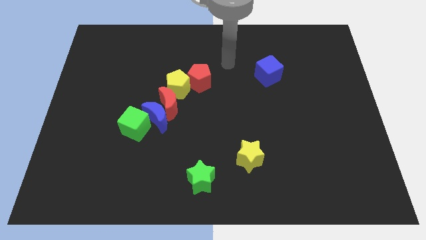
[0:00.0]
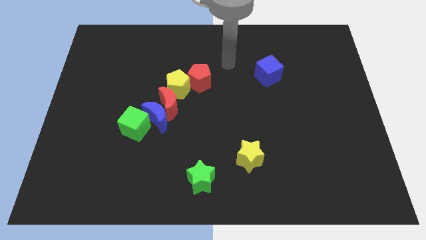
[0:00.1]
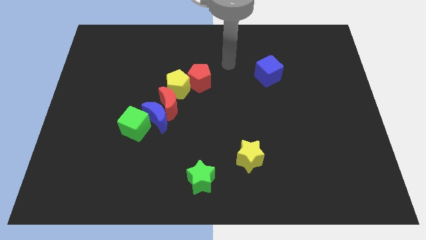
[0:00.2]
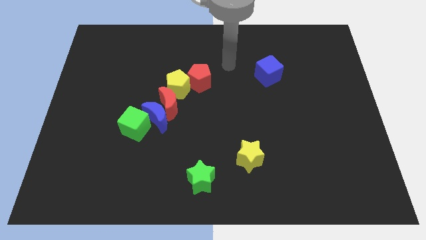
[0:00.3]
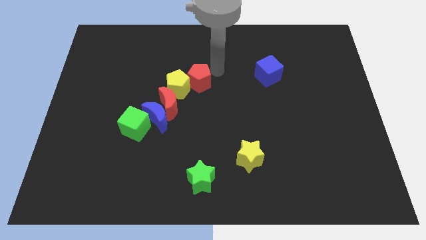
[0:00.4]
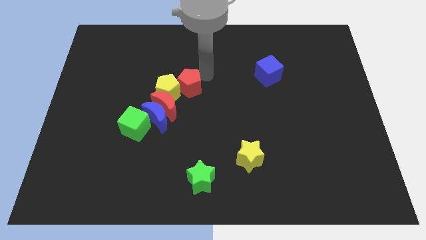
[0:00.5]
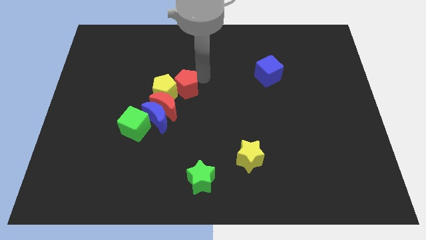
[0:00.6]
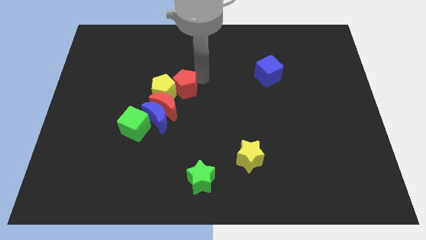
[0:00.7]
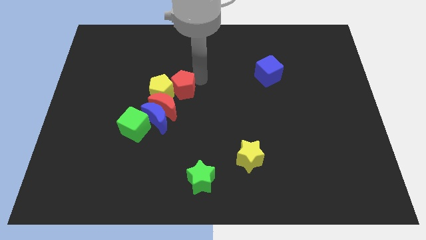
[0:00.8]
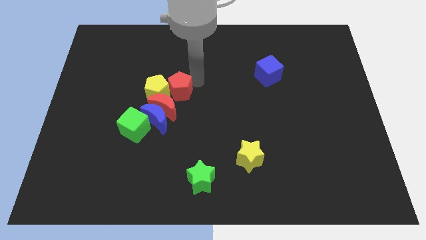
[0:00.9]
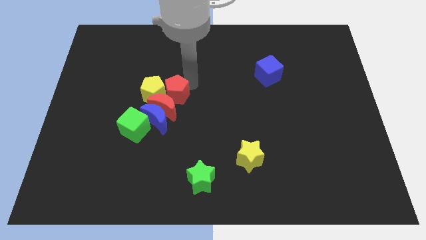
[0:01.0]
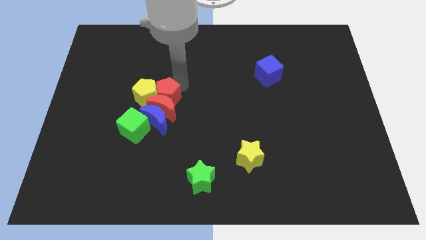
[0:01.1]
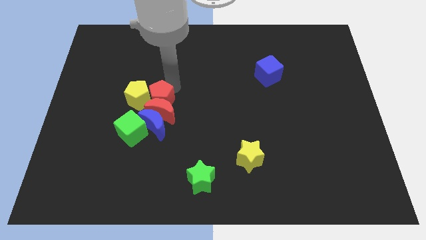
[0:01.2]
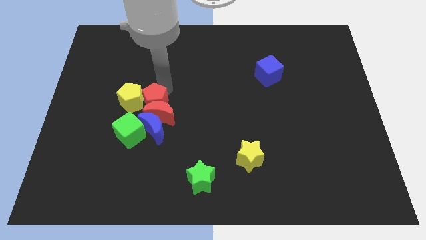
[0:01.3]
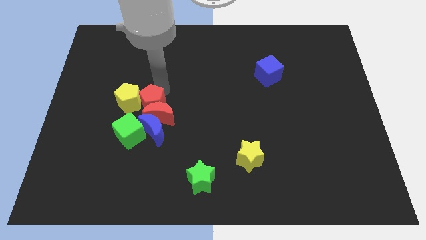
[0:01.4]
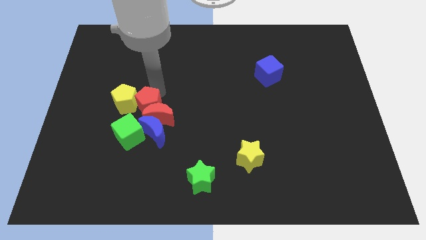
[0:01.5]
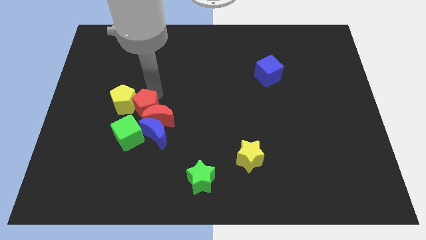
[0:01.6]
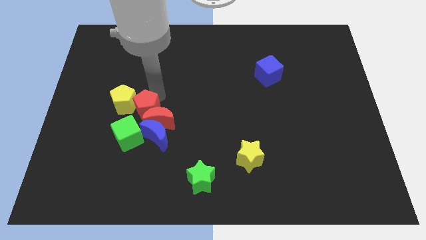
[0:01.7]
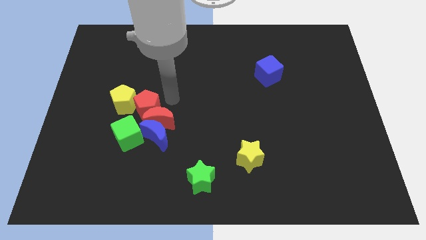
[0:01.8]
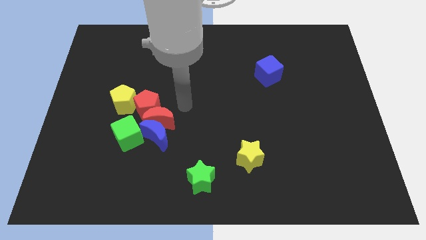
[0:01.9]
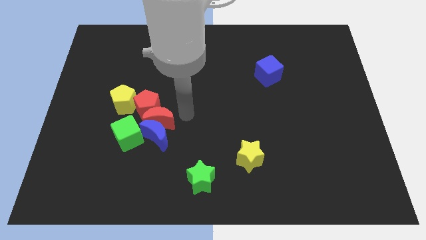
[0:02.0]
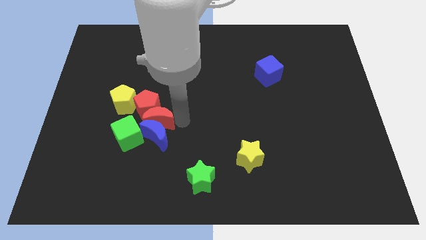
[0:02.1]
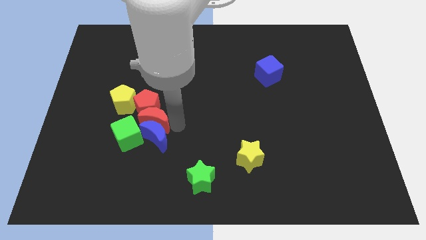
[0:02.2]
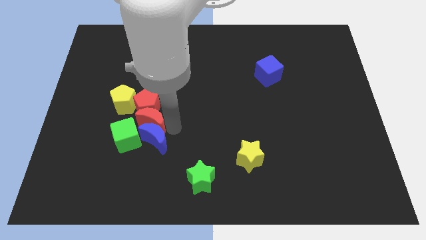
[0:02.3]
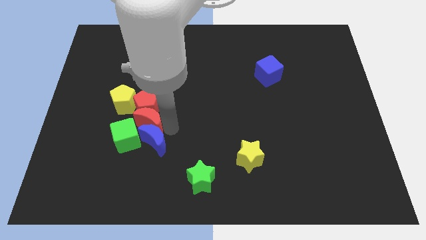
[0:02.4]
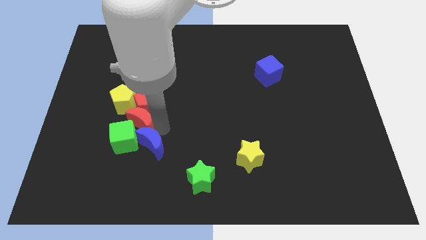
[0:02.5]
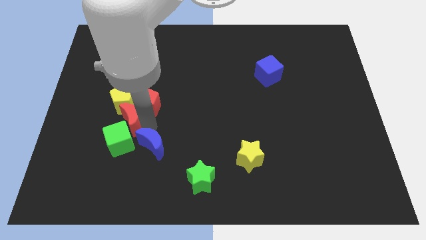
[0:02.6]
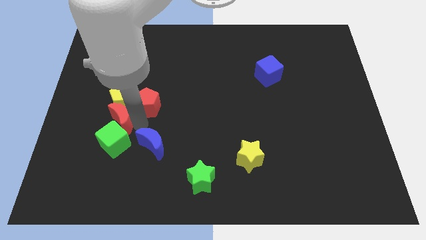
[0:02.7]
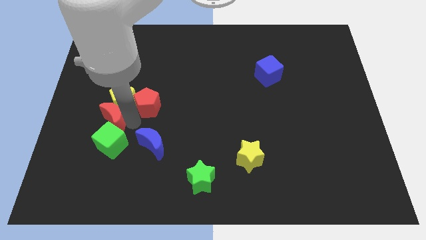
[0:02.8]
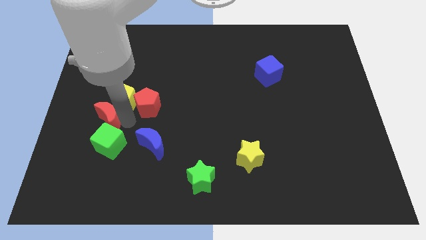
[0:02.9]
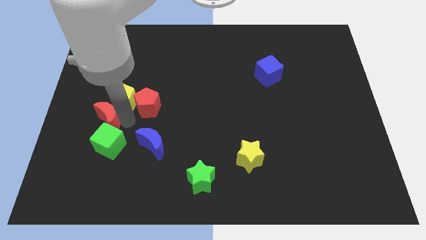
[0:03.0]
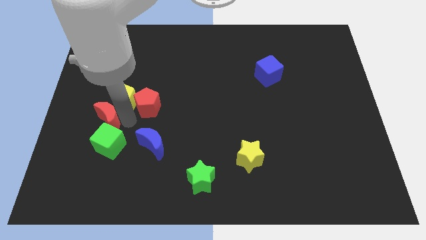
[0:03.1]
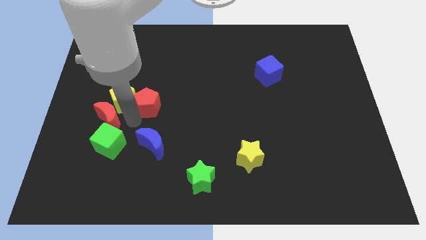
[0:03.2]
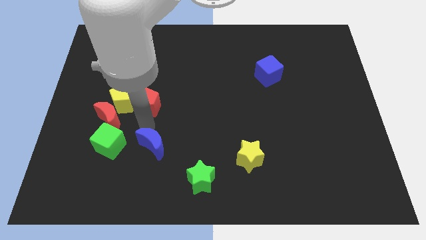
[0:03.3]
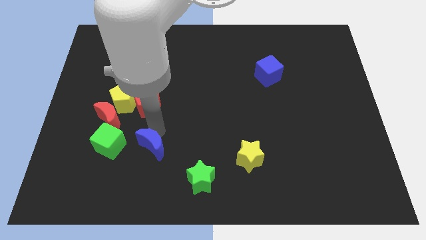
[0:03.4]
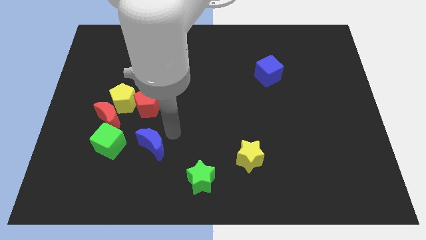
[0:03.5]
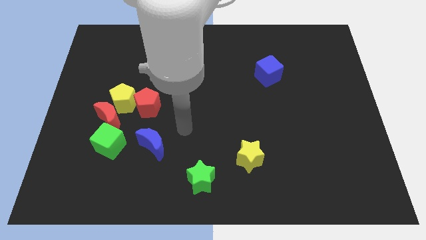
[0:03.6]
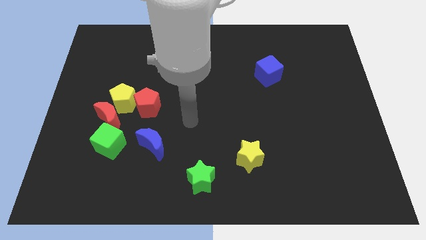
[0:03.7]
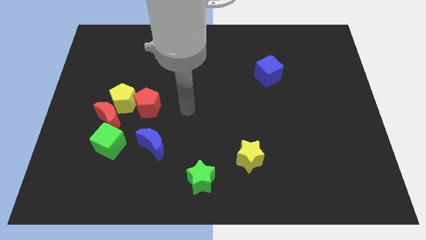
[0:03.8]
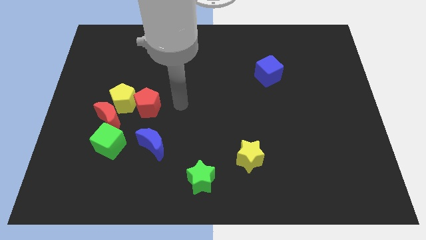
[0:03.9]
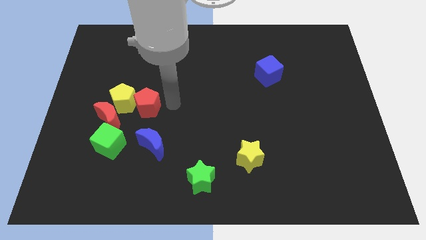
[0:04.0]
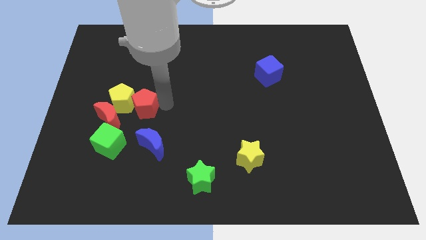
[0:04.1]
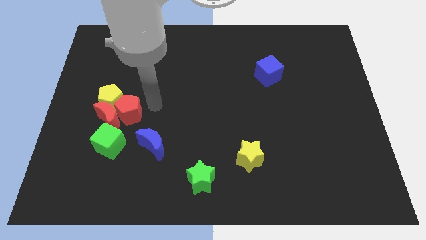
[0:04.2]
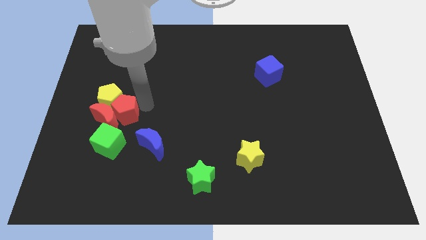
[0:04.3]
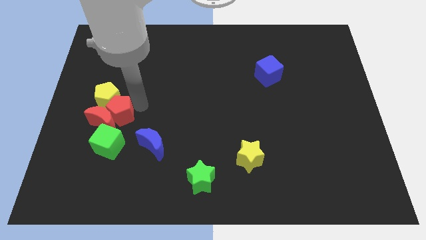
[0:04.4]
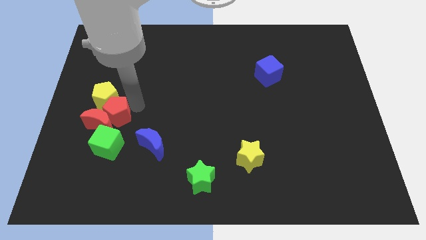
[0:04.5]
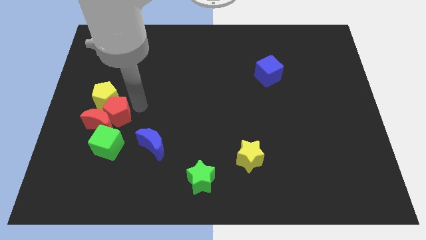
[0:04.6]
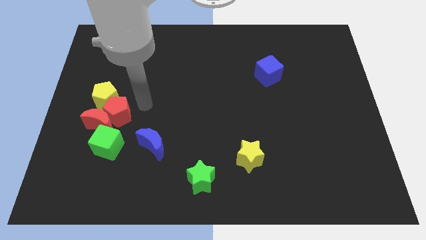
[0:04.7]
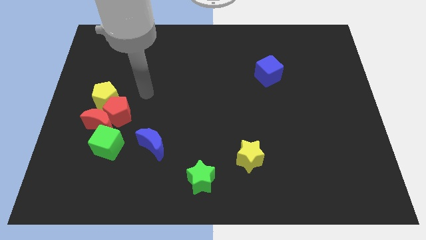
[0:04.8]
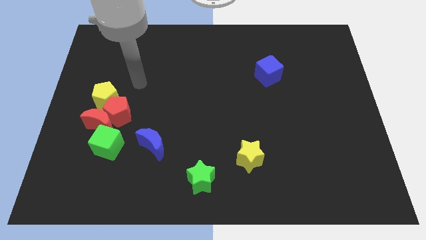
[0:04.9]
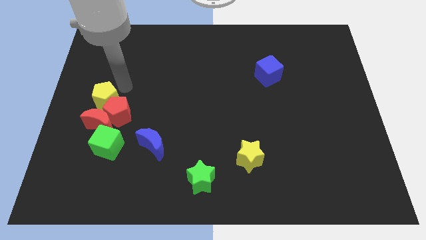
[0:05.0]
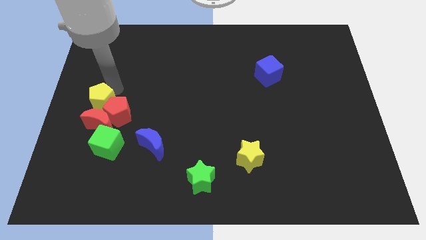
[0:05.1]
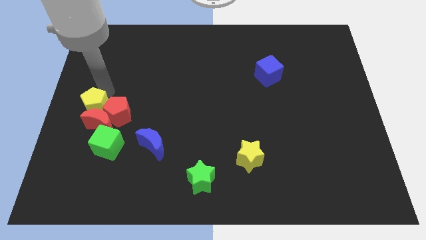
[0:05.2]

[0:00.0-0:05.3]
push the group of blocks to the left of the board

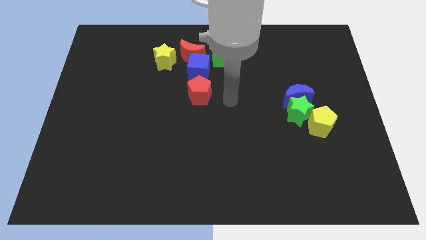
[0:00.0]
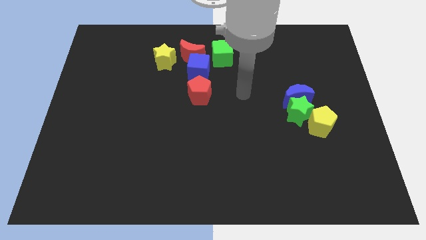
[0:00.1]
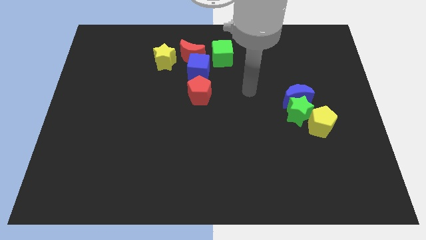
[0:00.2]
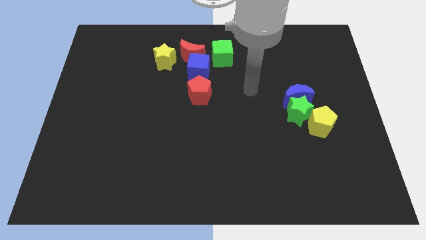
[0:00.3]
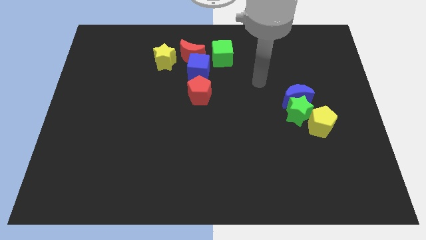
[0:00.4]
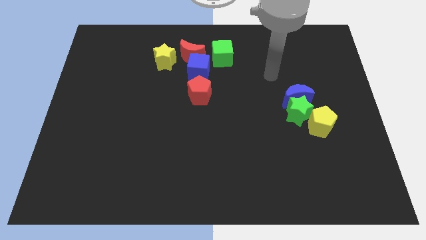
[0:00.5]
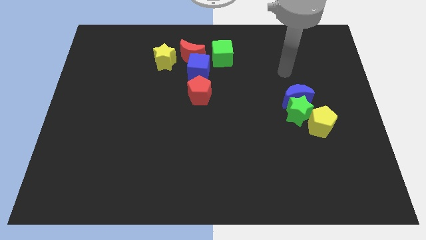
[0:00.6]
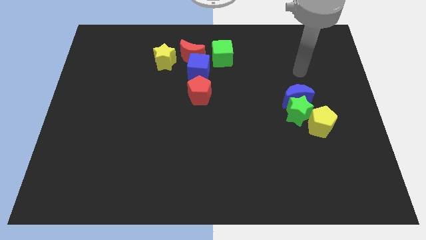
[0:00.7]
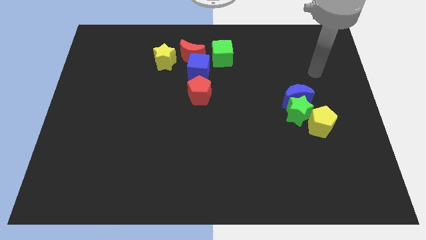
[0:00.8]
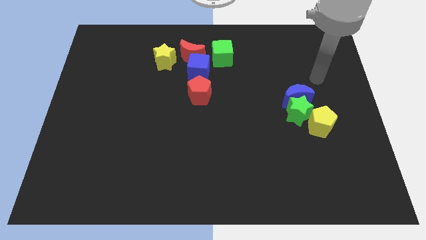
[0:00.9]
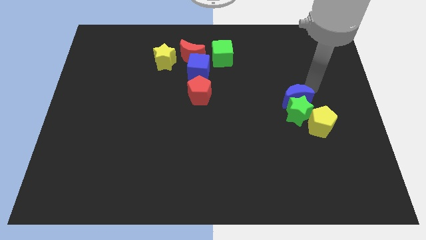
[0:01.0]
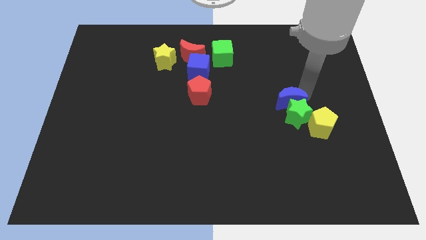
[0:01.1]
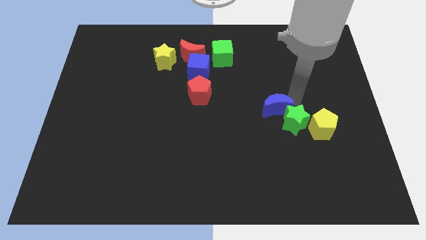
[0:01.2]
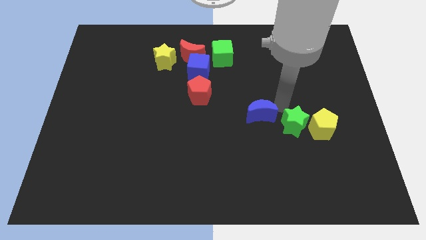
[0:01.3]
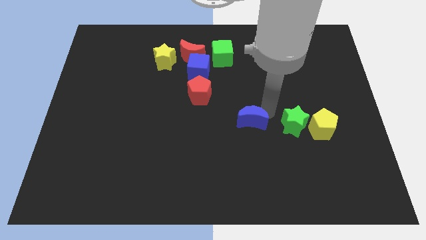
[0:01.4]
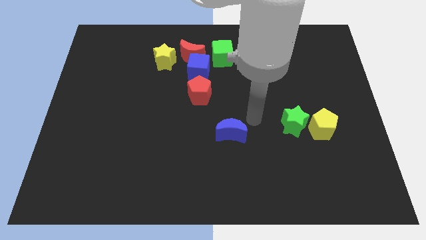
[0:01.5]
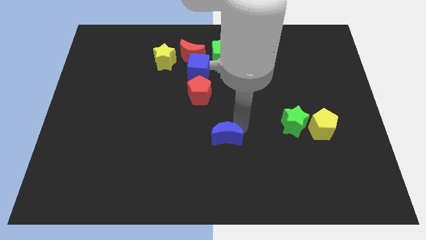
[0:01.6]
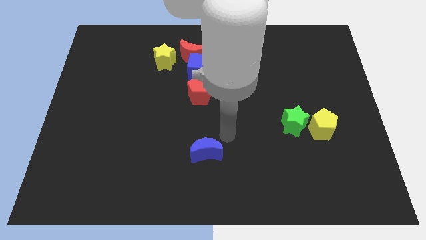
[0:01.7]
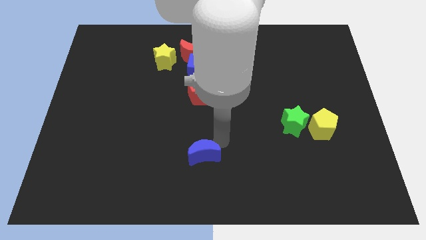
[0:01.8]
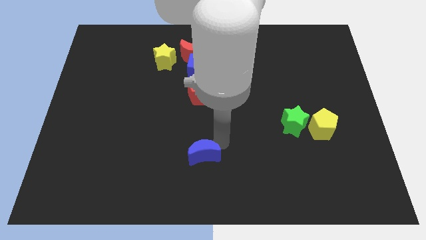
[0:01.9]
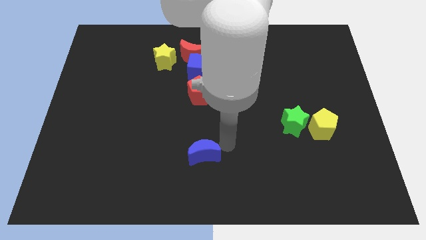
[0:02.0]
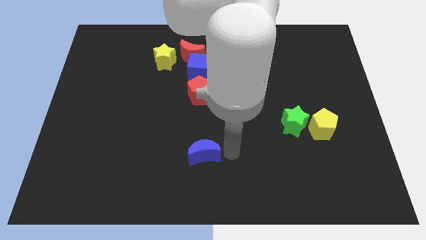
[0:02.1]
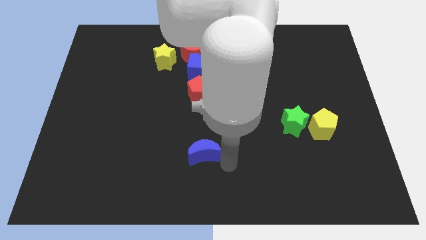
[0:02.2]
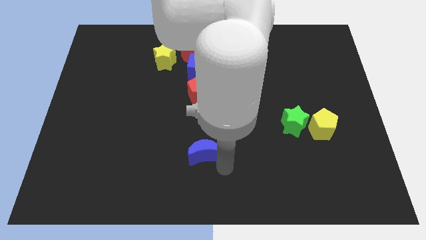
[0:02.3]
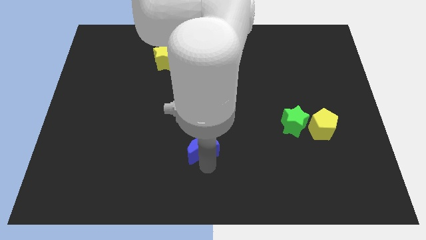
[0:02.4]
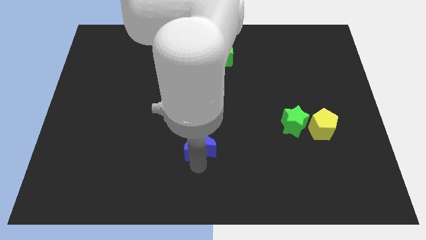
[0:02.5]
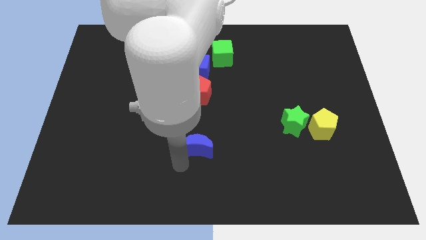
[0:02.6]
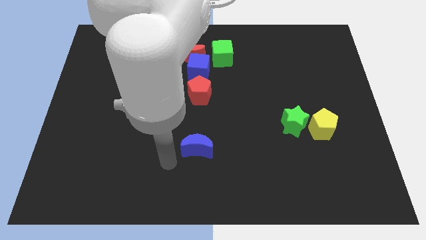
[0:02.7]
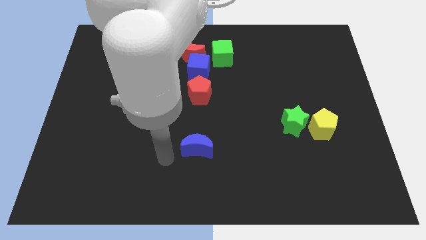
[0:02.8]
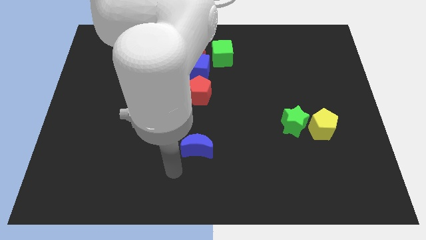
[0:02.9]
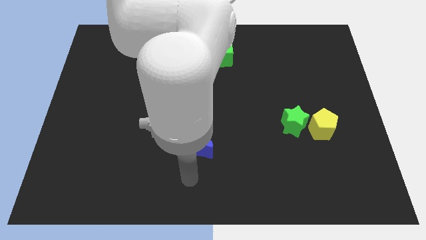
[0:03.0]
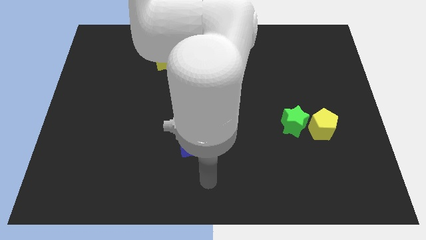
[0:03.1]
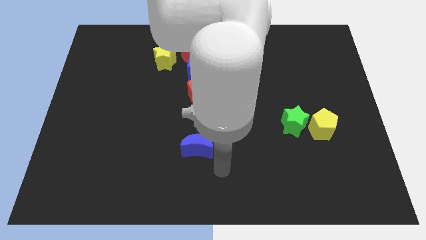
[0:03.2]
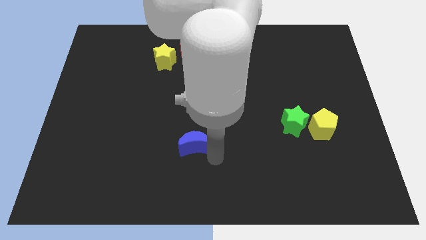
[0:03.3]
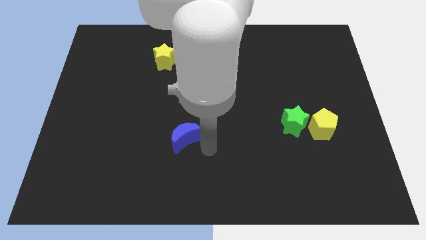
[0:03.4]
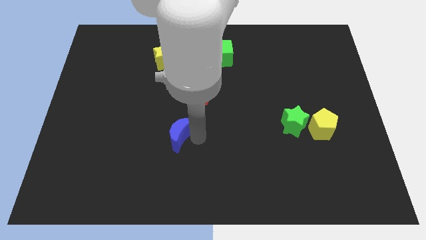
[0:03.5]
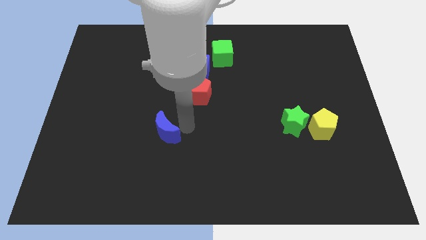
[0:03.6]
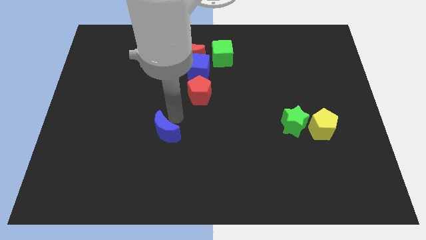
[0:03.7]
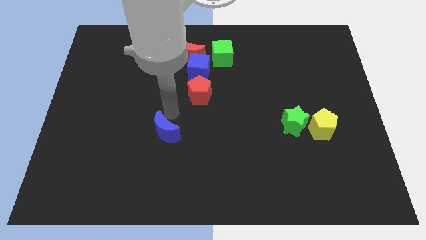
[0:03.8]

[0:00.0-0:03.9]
push the blue moon diagonally on the bottom left side of the red pentagon
